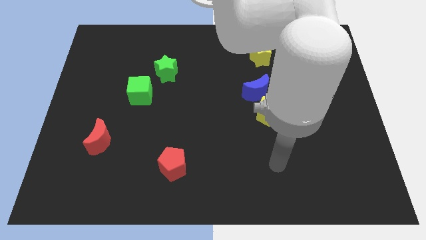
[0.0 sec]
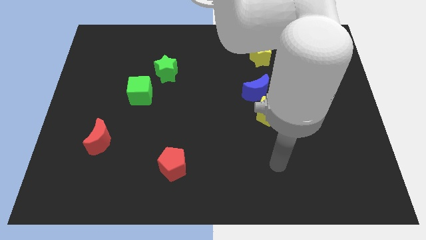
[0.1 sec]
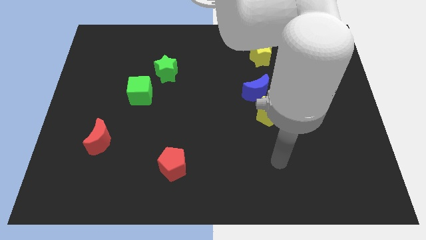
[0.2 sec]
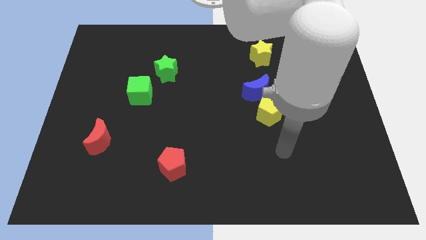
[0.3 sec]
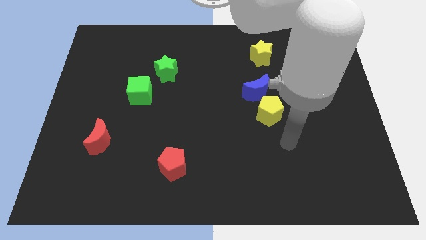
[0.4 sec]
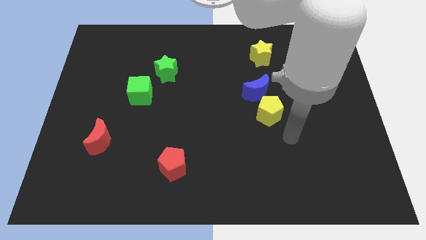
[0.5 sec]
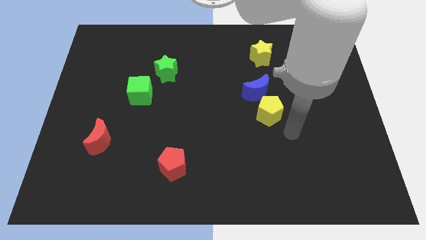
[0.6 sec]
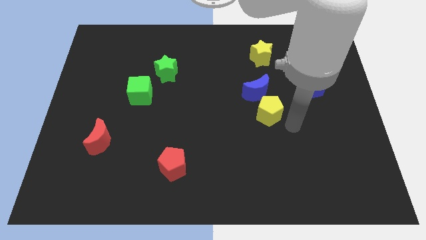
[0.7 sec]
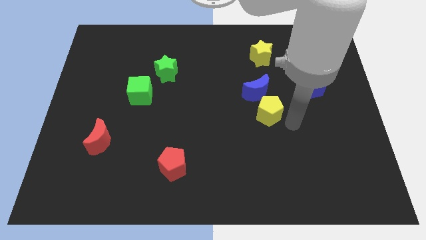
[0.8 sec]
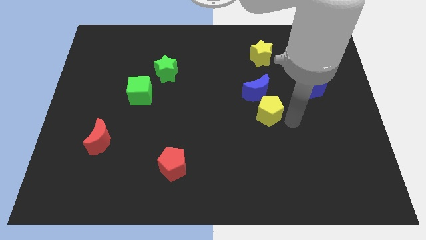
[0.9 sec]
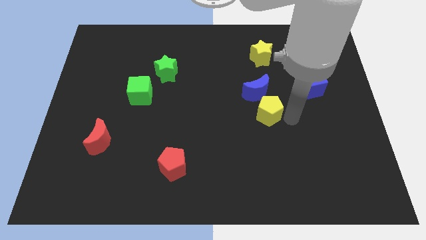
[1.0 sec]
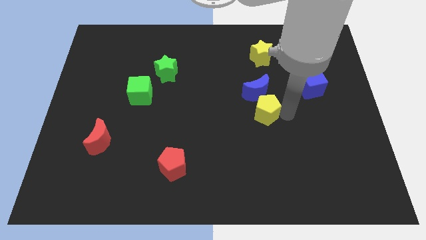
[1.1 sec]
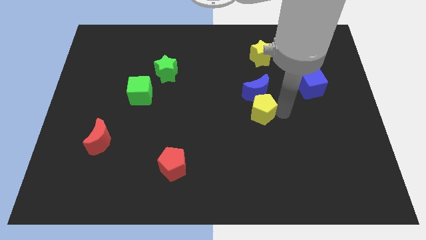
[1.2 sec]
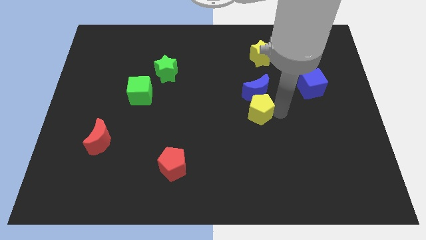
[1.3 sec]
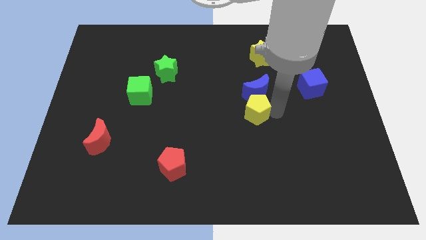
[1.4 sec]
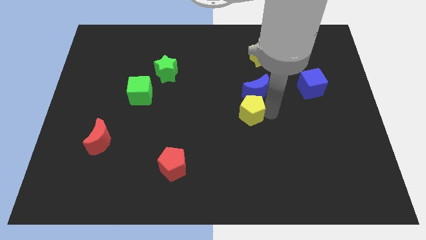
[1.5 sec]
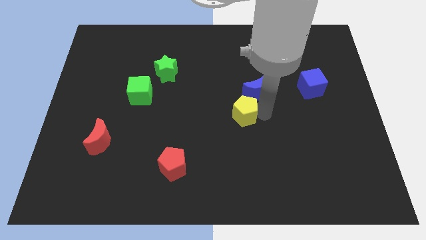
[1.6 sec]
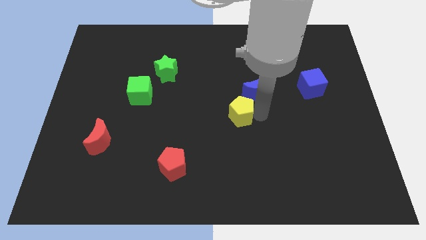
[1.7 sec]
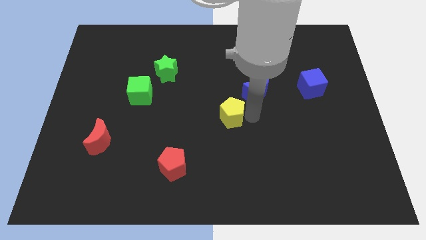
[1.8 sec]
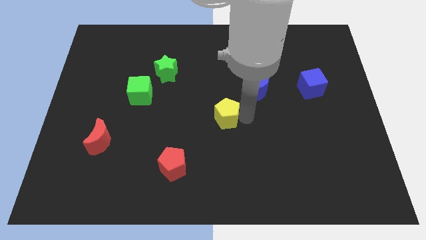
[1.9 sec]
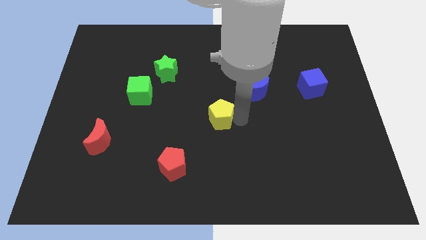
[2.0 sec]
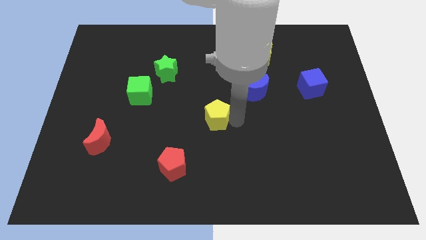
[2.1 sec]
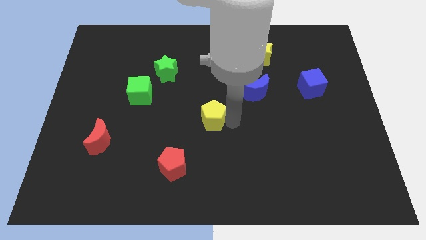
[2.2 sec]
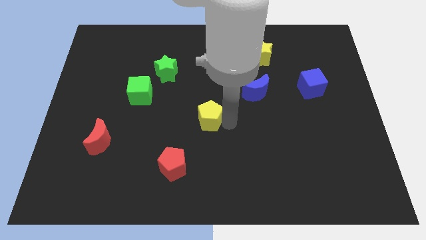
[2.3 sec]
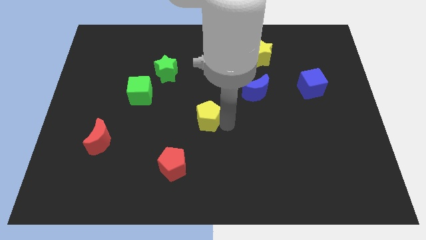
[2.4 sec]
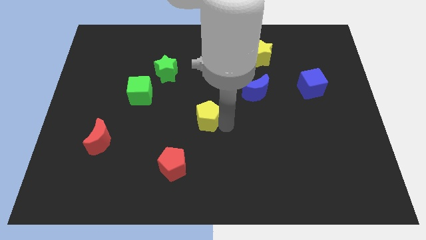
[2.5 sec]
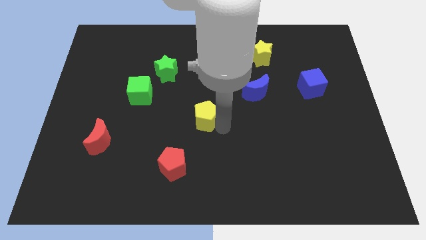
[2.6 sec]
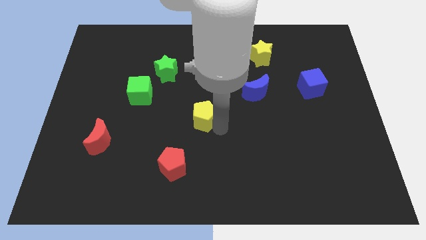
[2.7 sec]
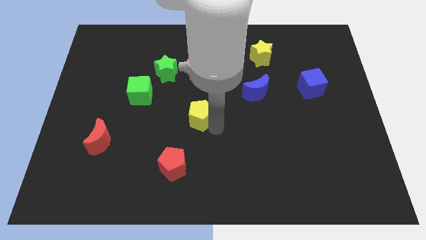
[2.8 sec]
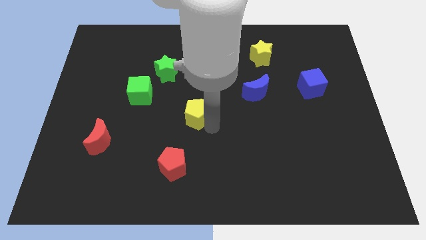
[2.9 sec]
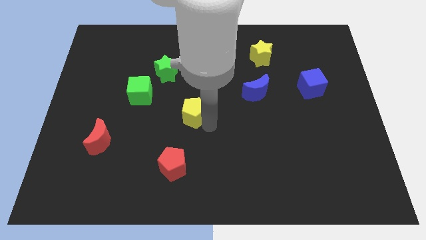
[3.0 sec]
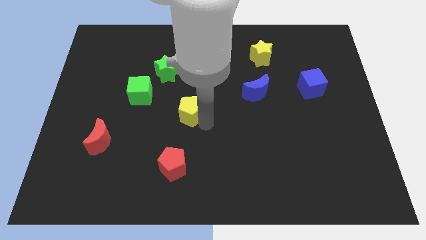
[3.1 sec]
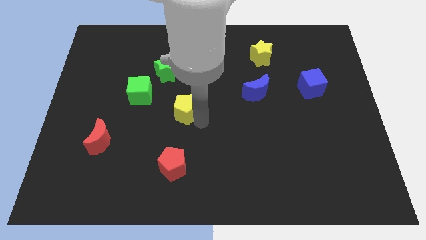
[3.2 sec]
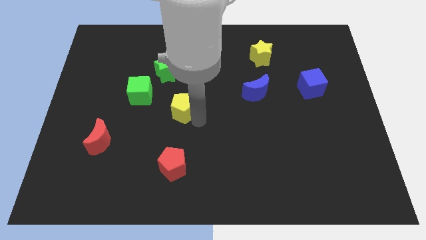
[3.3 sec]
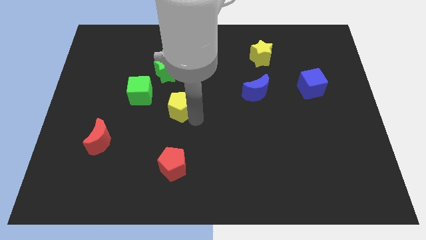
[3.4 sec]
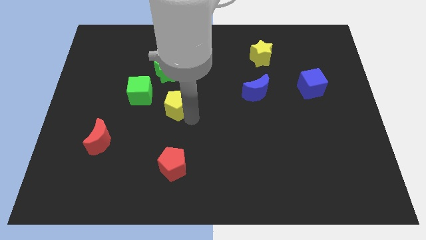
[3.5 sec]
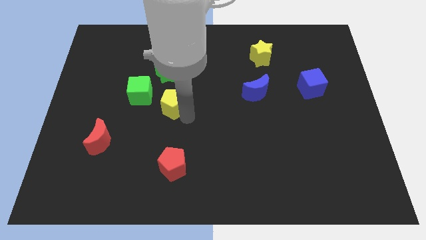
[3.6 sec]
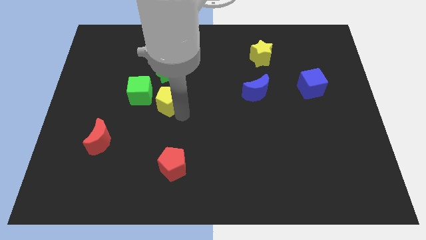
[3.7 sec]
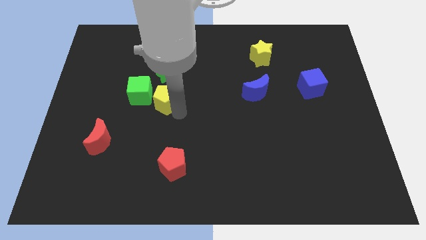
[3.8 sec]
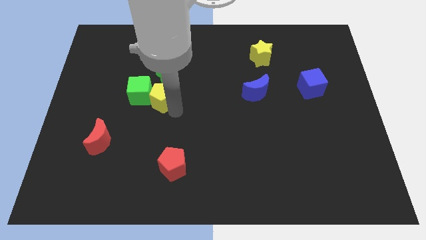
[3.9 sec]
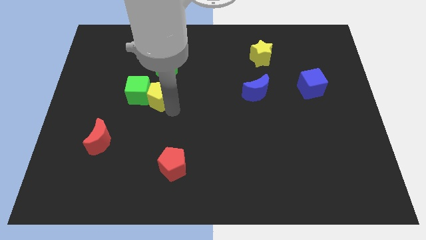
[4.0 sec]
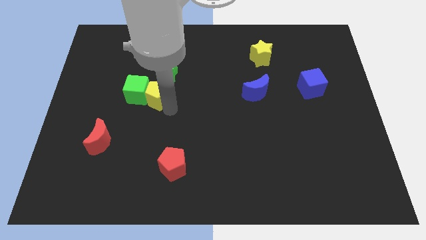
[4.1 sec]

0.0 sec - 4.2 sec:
put the yellow pentagon to the green cube

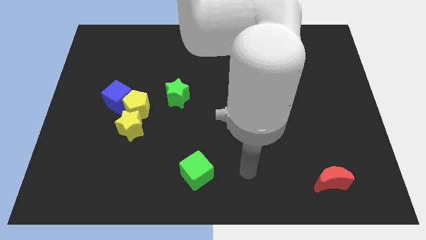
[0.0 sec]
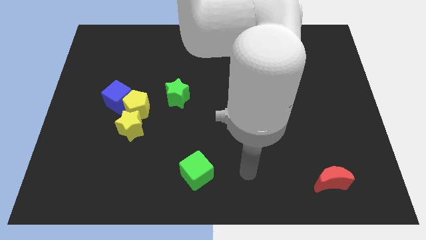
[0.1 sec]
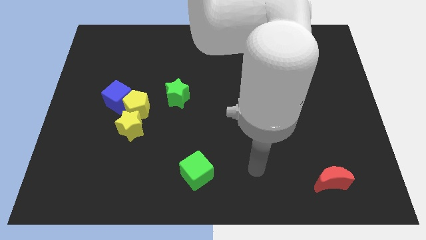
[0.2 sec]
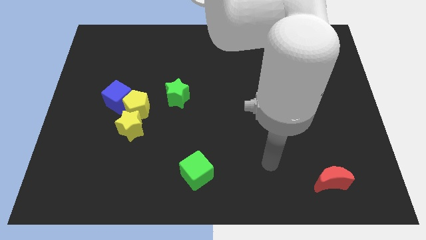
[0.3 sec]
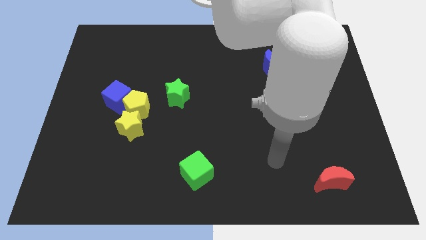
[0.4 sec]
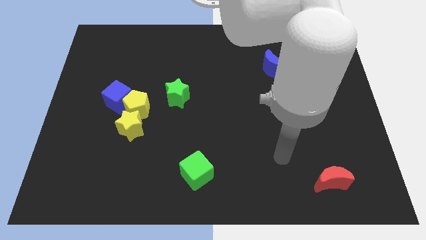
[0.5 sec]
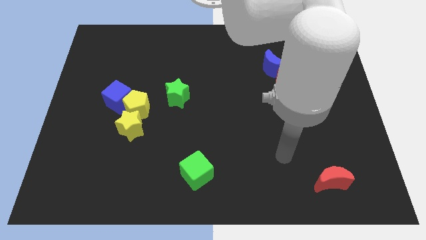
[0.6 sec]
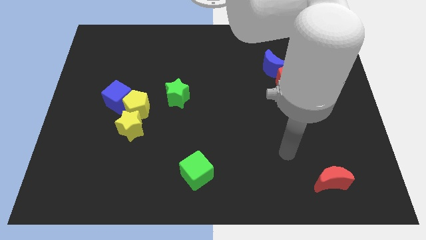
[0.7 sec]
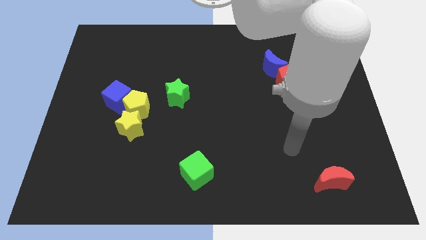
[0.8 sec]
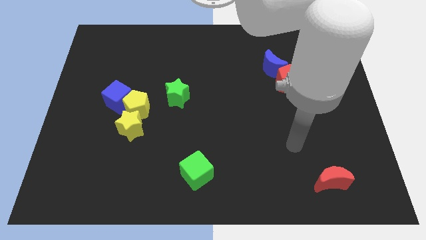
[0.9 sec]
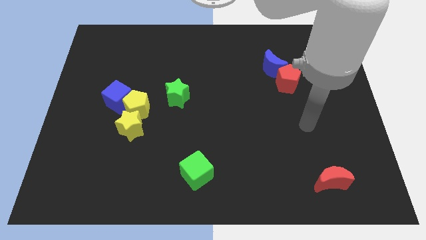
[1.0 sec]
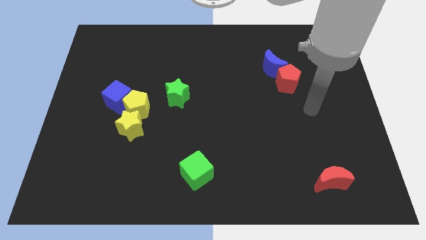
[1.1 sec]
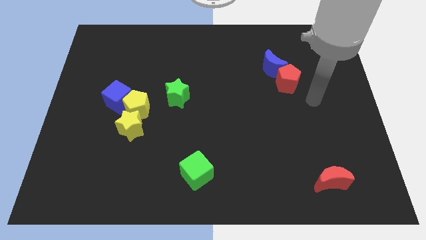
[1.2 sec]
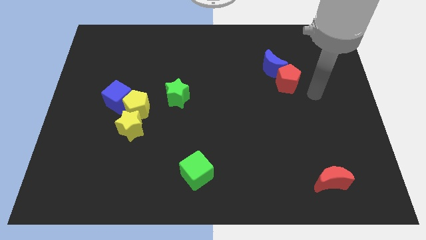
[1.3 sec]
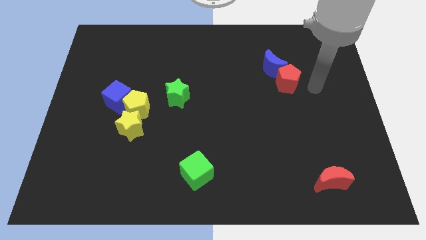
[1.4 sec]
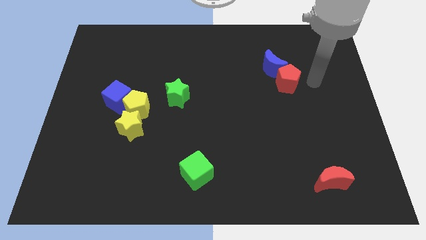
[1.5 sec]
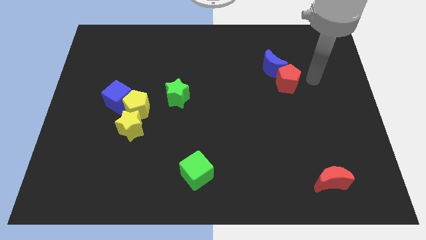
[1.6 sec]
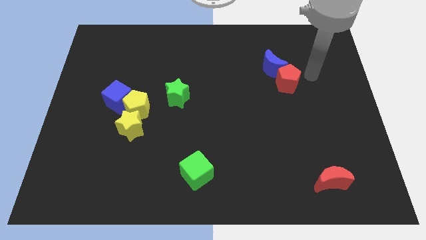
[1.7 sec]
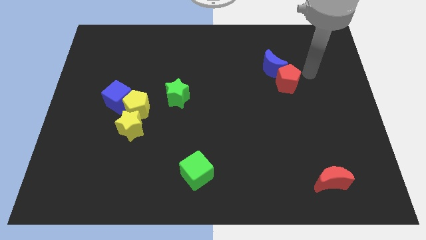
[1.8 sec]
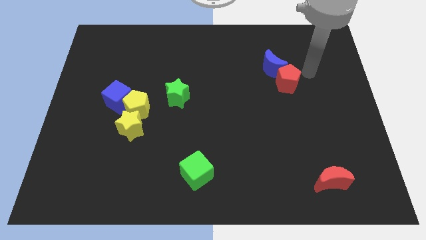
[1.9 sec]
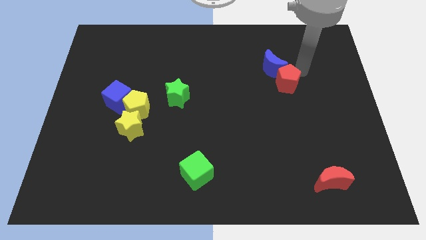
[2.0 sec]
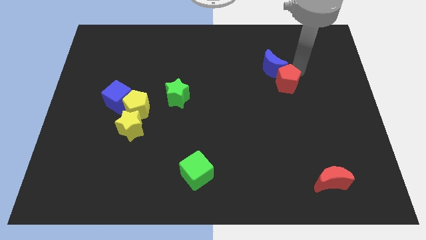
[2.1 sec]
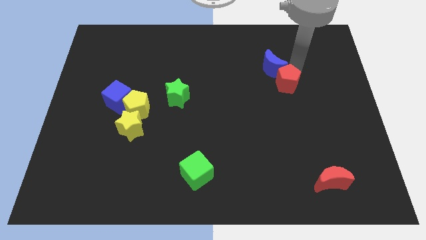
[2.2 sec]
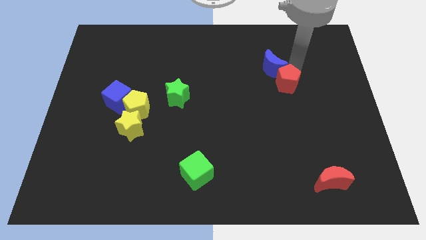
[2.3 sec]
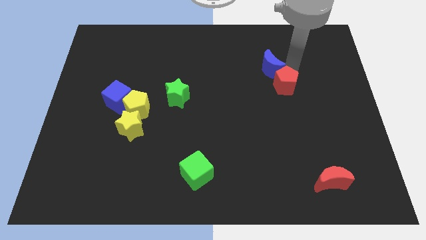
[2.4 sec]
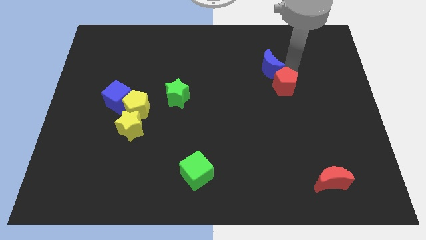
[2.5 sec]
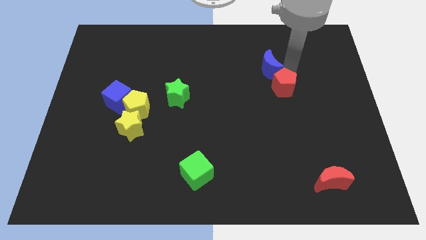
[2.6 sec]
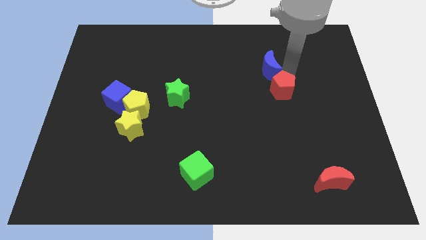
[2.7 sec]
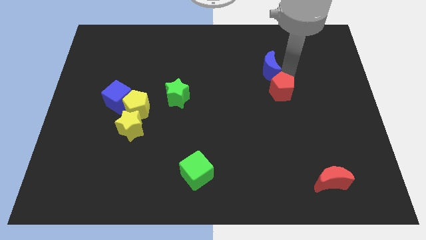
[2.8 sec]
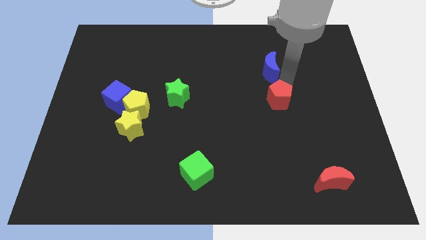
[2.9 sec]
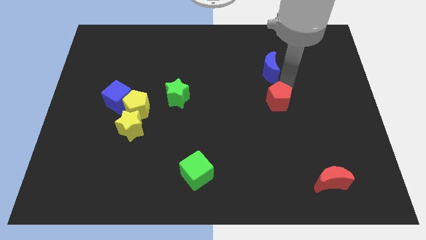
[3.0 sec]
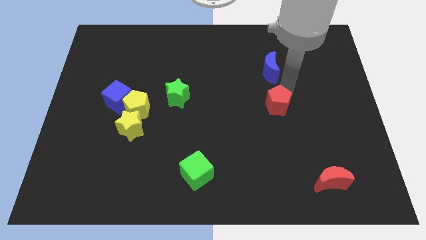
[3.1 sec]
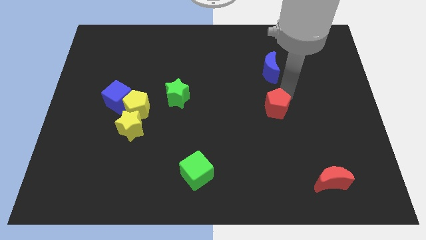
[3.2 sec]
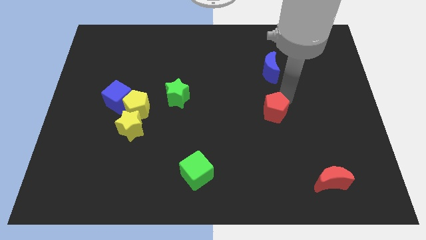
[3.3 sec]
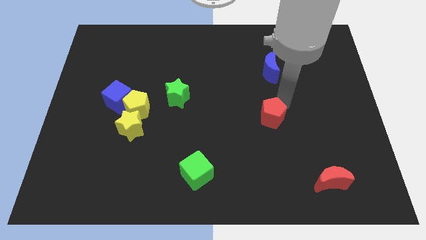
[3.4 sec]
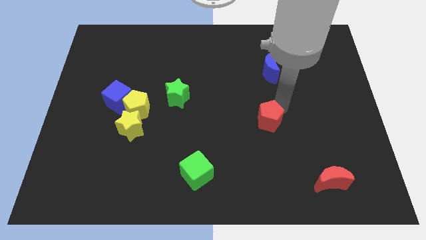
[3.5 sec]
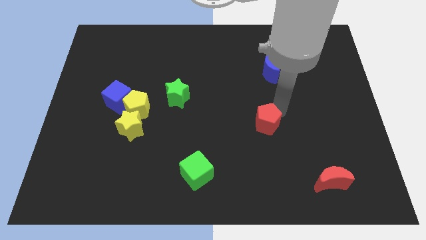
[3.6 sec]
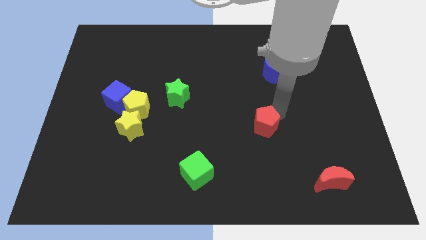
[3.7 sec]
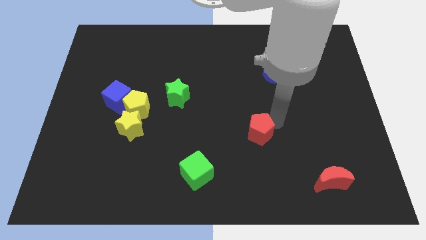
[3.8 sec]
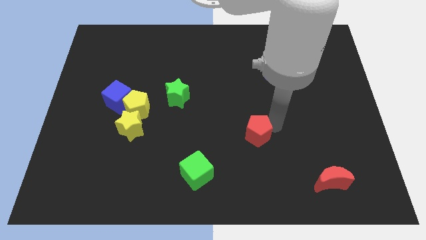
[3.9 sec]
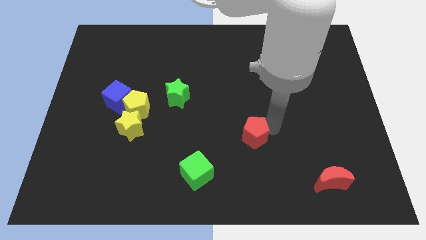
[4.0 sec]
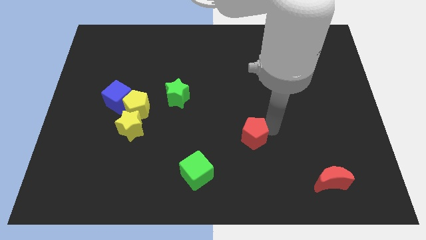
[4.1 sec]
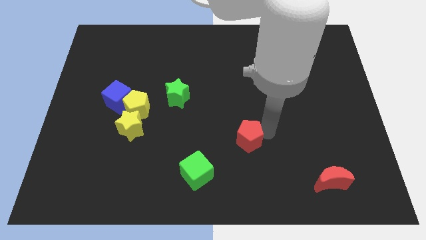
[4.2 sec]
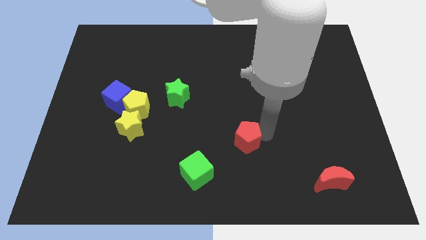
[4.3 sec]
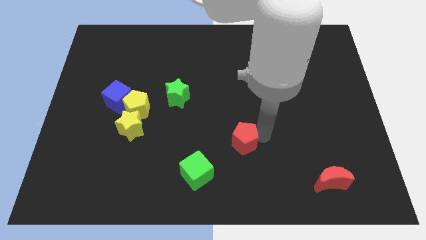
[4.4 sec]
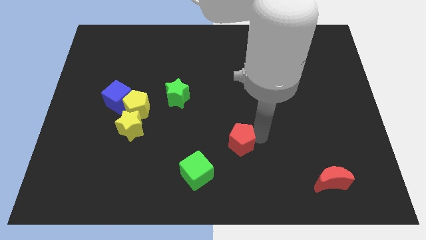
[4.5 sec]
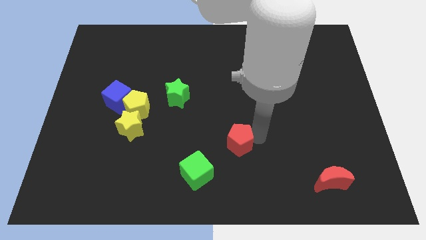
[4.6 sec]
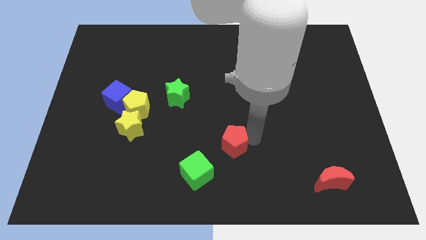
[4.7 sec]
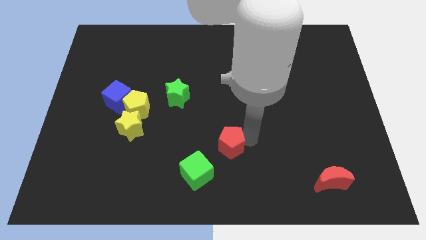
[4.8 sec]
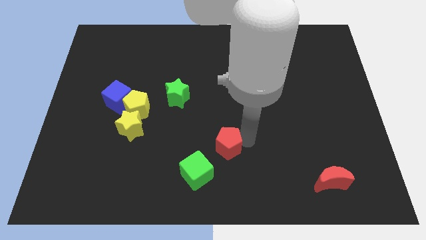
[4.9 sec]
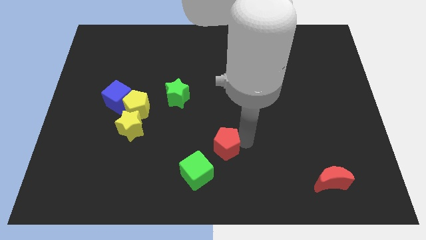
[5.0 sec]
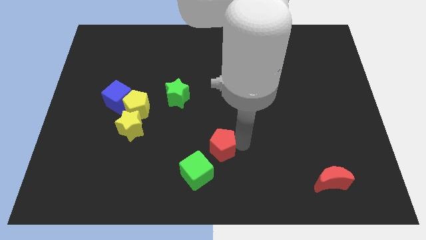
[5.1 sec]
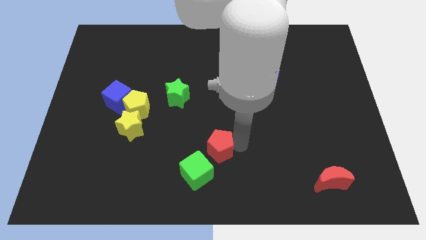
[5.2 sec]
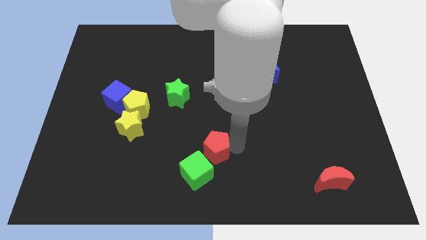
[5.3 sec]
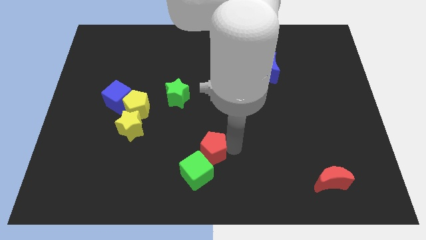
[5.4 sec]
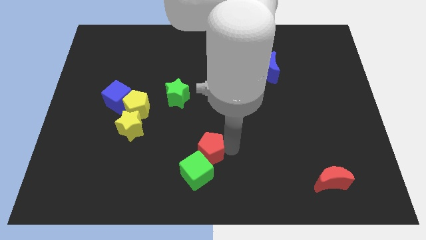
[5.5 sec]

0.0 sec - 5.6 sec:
push the red pentagon towards the green cube
